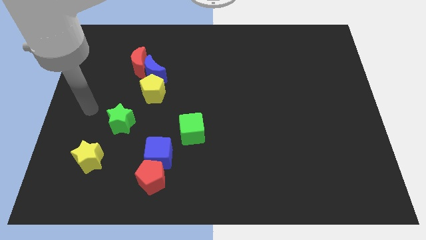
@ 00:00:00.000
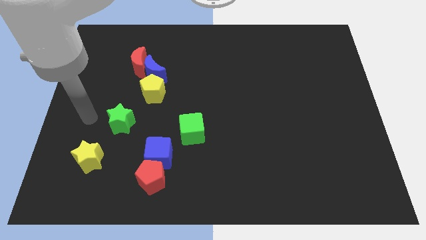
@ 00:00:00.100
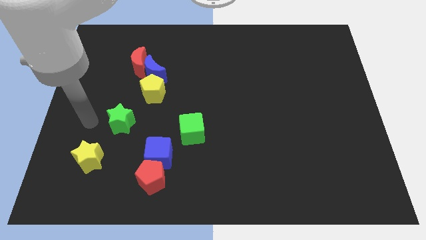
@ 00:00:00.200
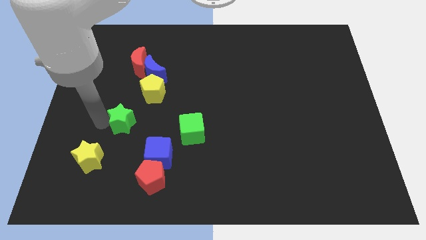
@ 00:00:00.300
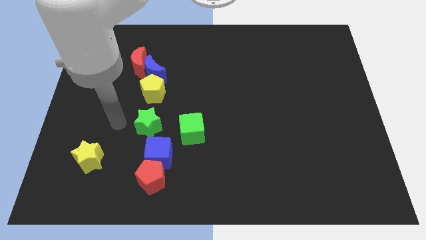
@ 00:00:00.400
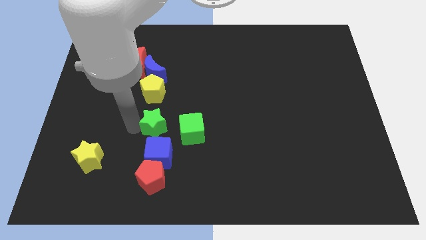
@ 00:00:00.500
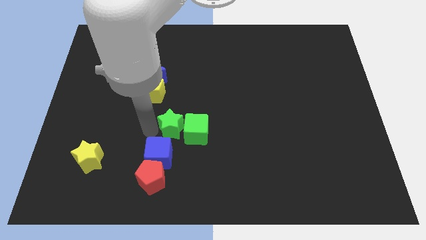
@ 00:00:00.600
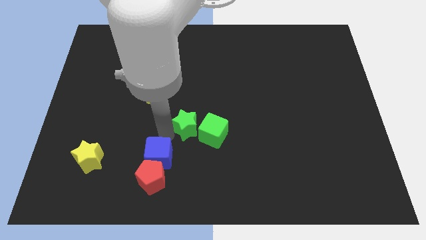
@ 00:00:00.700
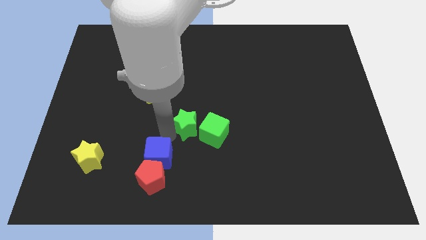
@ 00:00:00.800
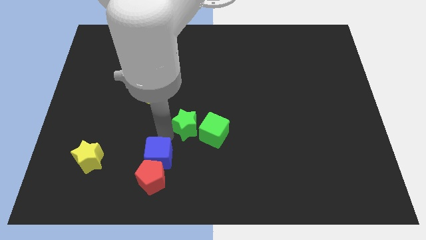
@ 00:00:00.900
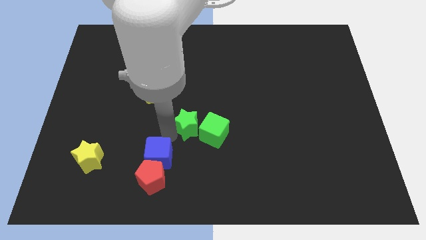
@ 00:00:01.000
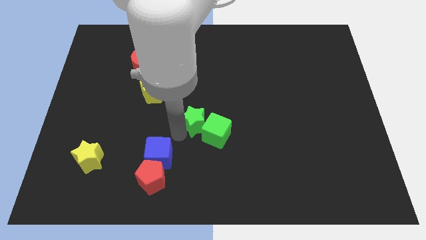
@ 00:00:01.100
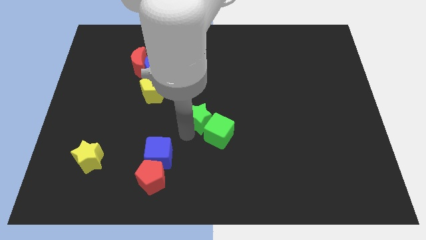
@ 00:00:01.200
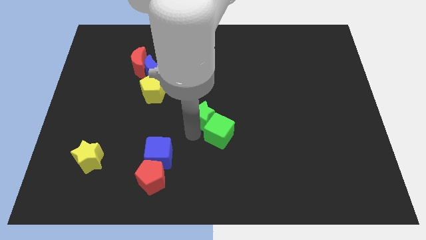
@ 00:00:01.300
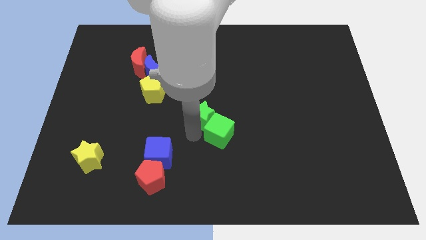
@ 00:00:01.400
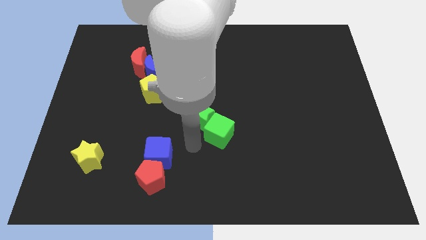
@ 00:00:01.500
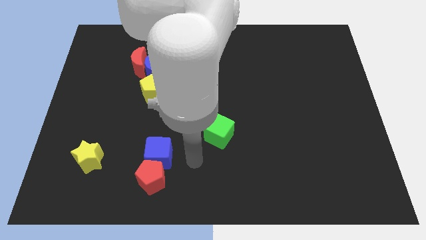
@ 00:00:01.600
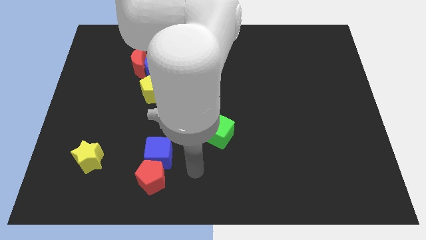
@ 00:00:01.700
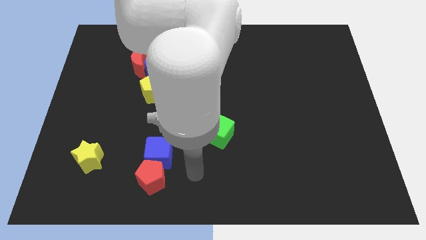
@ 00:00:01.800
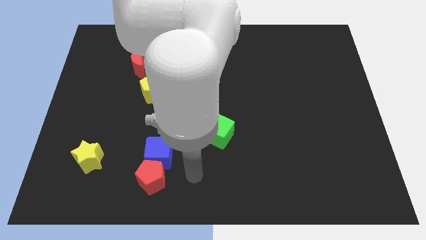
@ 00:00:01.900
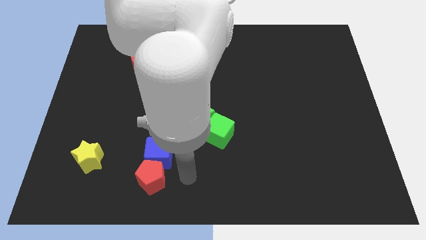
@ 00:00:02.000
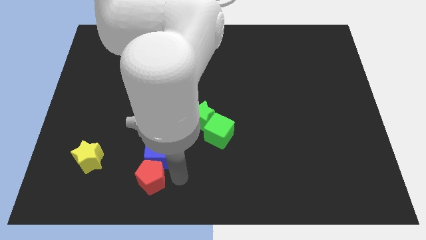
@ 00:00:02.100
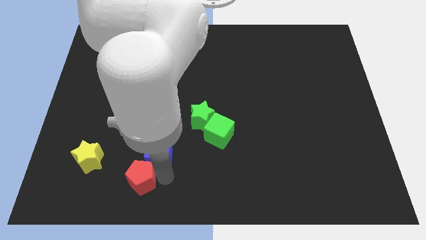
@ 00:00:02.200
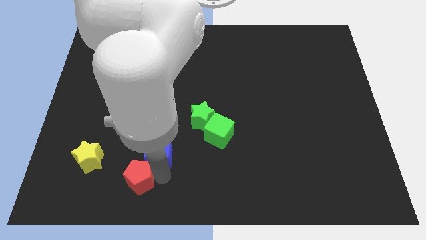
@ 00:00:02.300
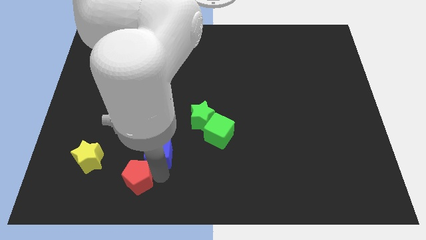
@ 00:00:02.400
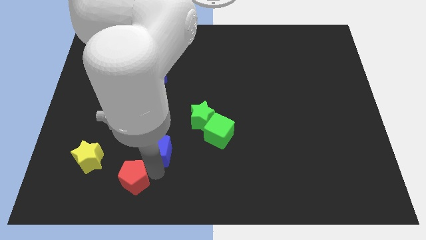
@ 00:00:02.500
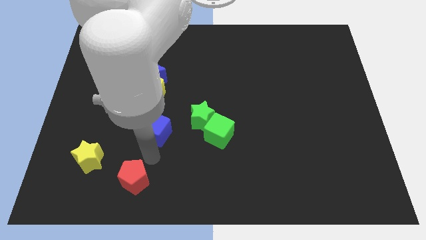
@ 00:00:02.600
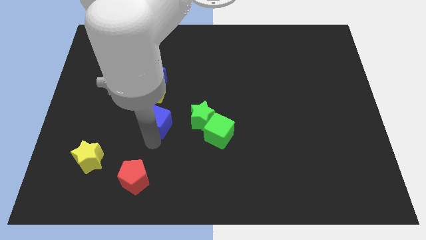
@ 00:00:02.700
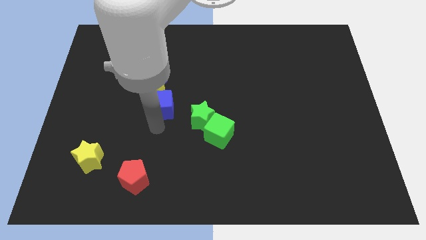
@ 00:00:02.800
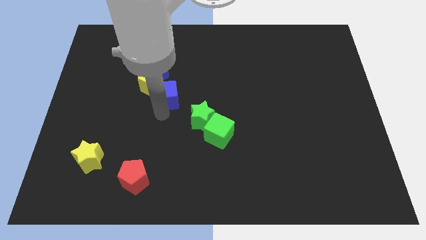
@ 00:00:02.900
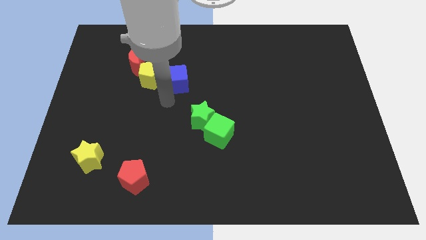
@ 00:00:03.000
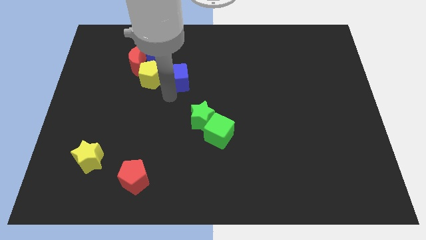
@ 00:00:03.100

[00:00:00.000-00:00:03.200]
push blue cube to the right side of the yellow pentagon

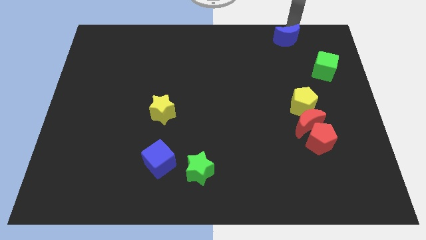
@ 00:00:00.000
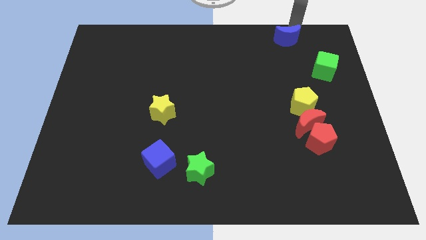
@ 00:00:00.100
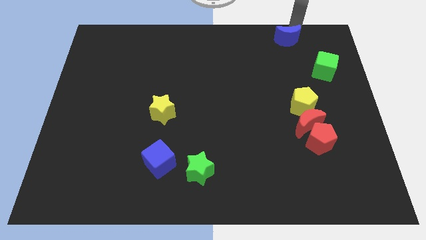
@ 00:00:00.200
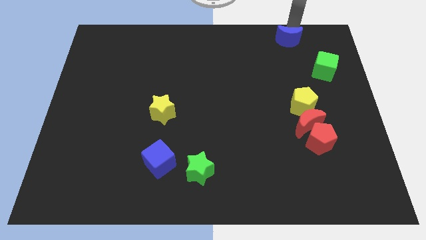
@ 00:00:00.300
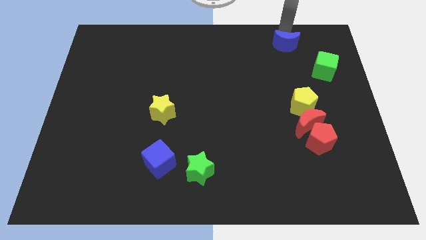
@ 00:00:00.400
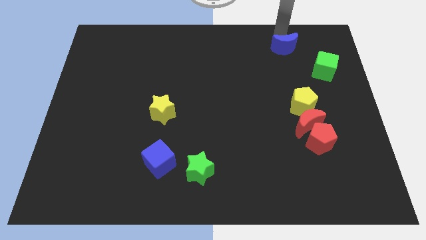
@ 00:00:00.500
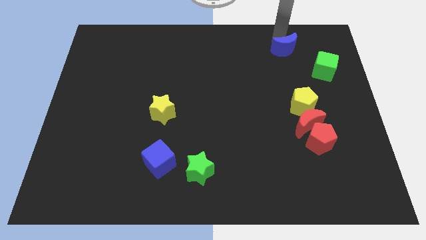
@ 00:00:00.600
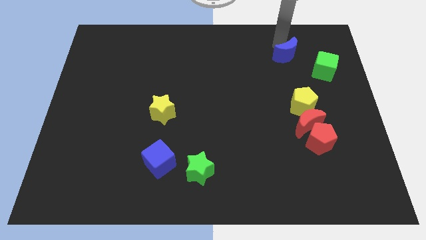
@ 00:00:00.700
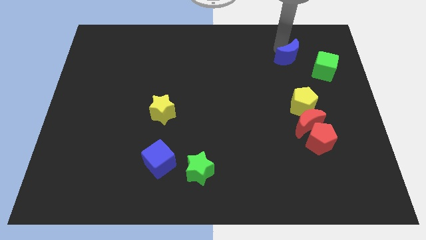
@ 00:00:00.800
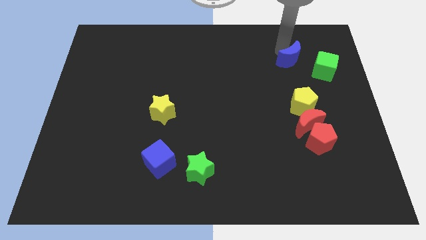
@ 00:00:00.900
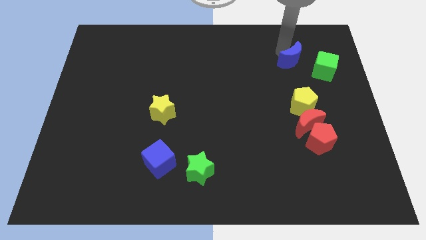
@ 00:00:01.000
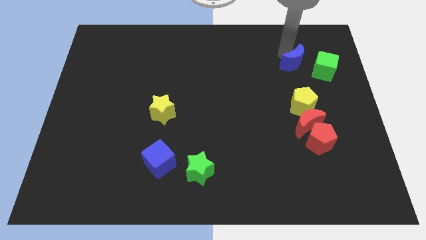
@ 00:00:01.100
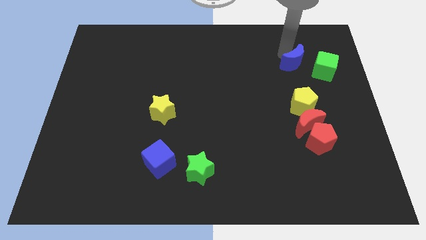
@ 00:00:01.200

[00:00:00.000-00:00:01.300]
push the blue crescent slightly down

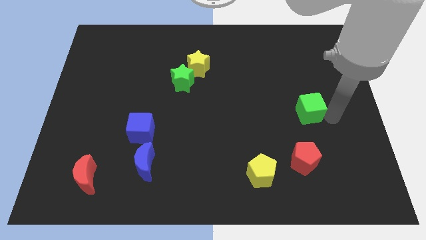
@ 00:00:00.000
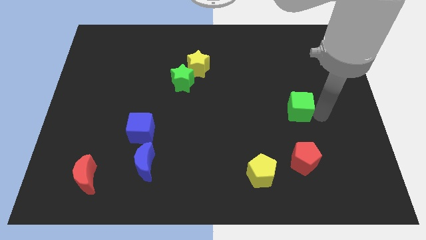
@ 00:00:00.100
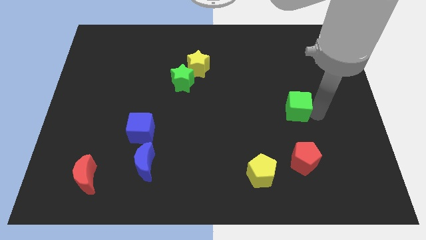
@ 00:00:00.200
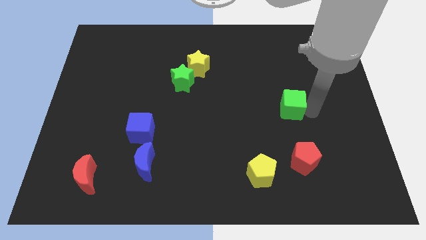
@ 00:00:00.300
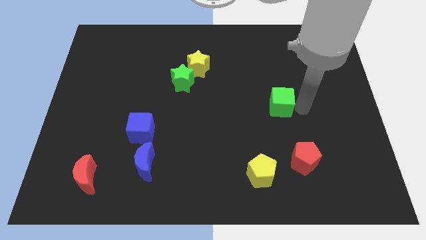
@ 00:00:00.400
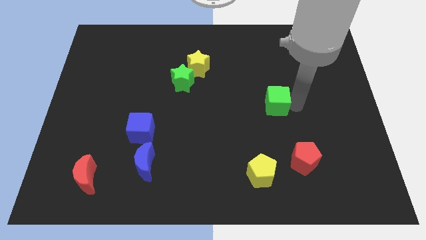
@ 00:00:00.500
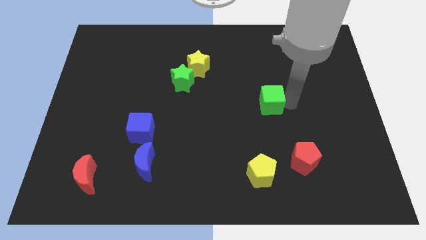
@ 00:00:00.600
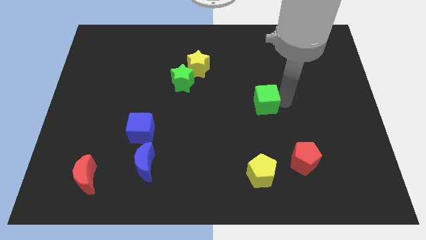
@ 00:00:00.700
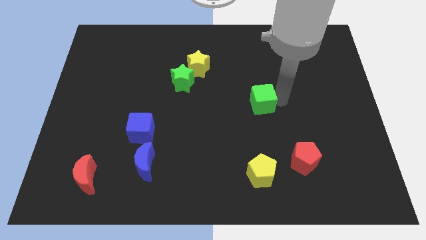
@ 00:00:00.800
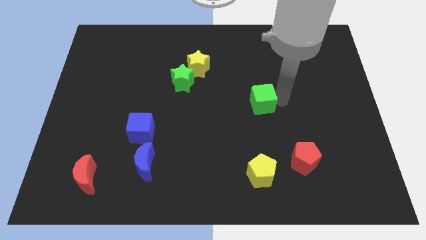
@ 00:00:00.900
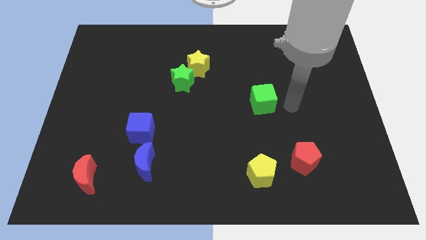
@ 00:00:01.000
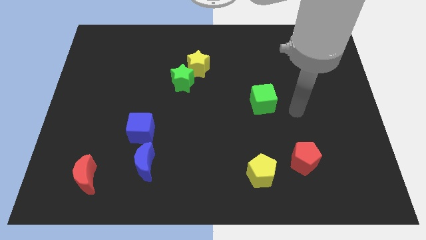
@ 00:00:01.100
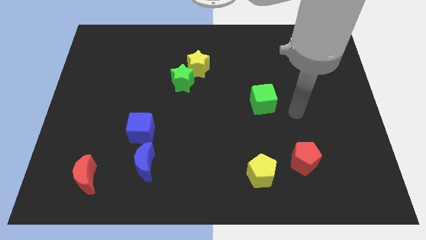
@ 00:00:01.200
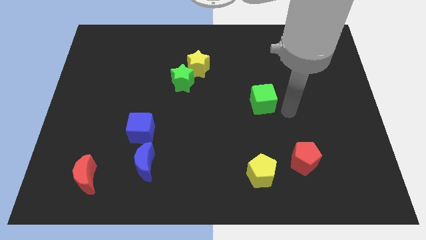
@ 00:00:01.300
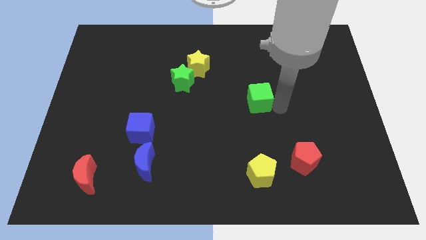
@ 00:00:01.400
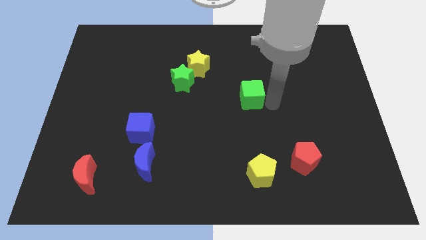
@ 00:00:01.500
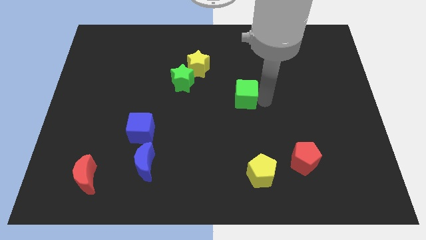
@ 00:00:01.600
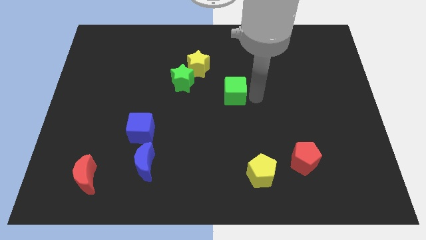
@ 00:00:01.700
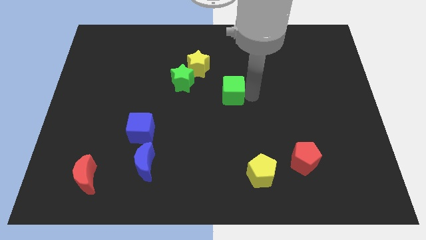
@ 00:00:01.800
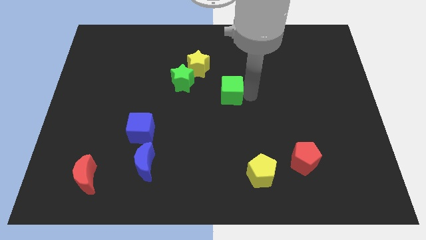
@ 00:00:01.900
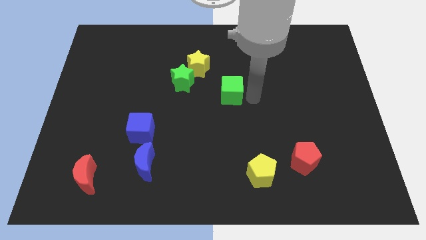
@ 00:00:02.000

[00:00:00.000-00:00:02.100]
push green cube towards green star

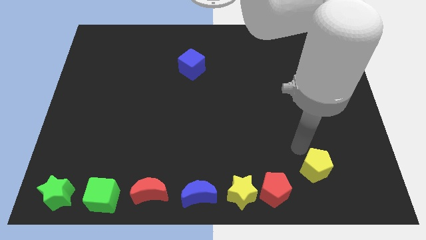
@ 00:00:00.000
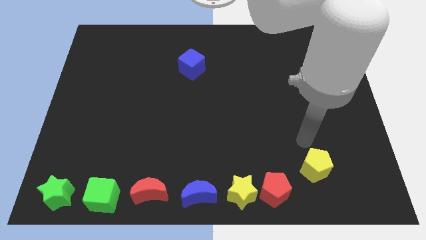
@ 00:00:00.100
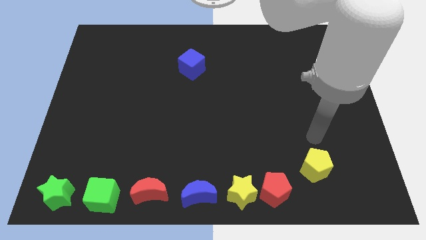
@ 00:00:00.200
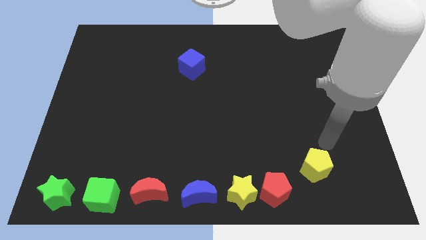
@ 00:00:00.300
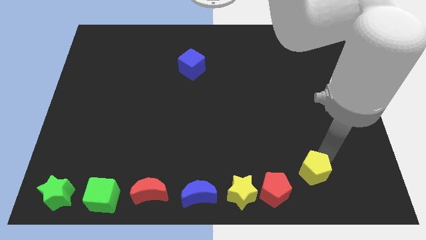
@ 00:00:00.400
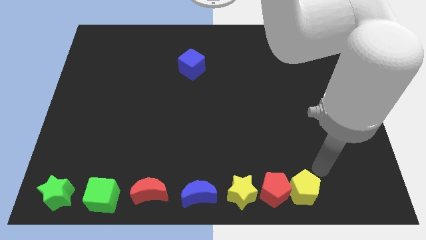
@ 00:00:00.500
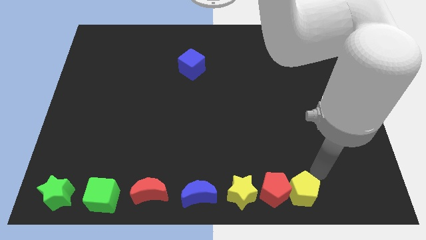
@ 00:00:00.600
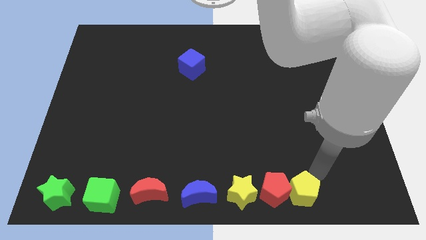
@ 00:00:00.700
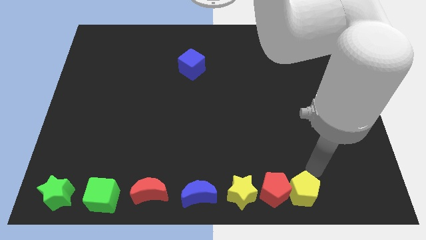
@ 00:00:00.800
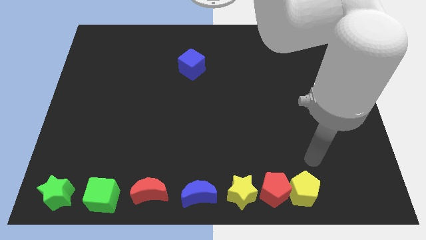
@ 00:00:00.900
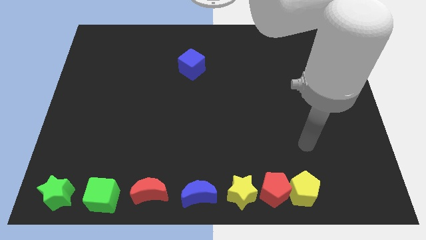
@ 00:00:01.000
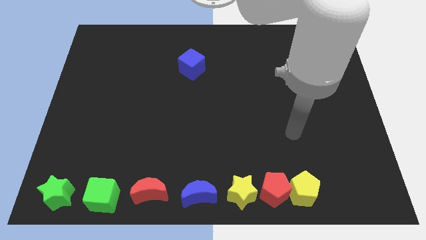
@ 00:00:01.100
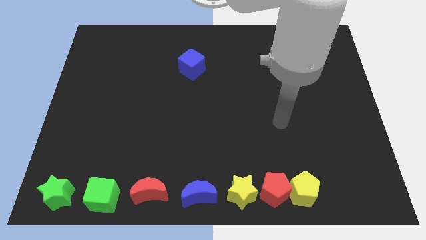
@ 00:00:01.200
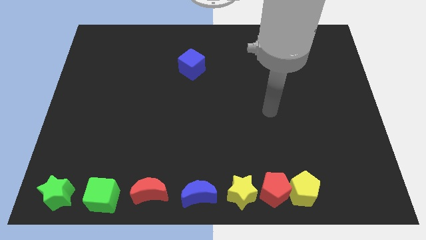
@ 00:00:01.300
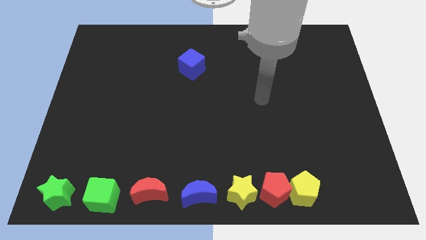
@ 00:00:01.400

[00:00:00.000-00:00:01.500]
move the yellow pentagon to the right to the red pentagon

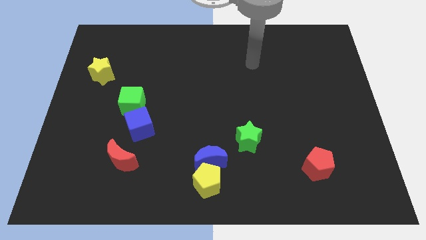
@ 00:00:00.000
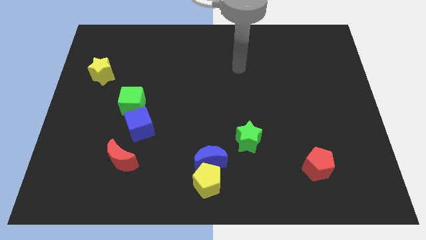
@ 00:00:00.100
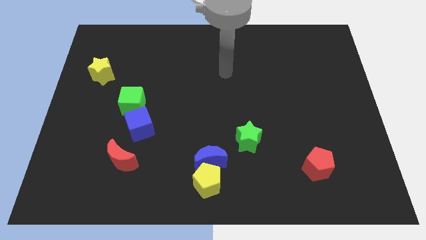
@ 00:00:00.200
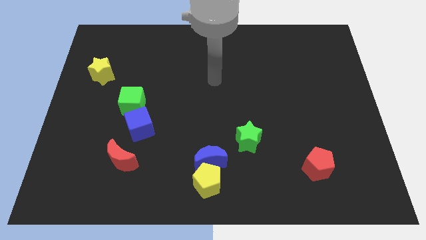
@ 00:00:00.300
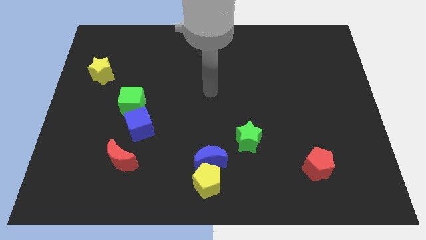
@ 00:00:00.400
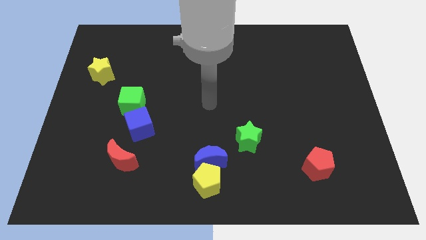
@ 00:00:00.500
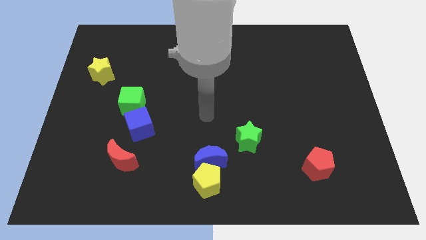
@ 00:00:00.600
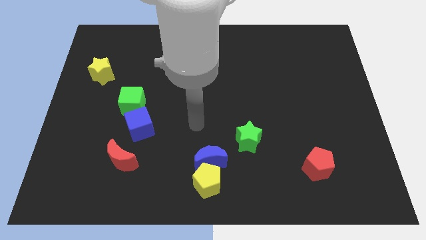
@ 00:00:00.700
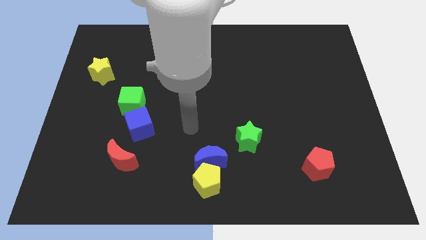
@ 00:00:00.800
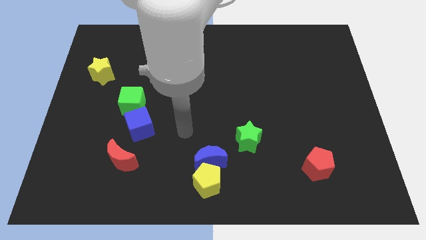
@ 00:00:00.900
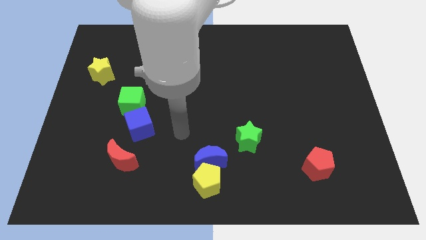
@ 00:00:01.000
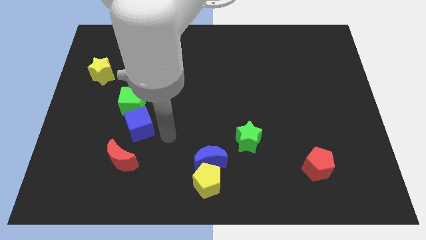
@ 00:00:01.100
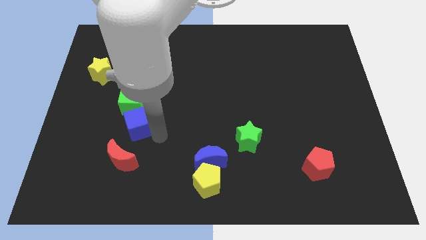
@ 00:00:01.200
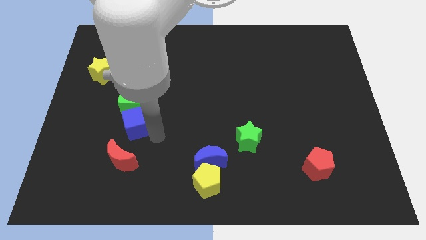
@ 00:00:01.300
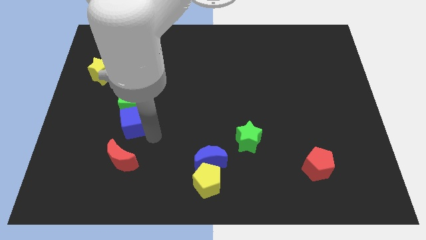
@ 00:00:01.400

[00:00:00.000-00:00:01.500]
move the arm towards blue cube
